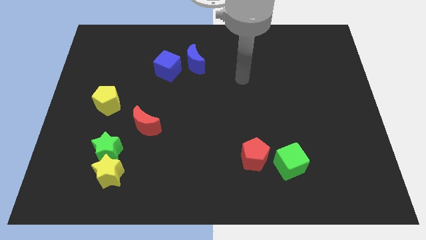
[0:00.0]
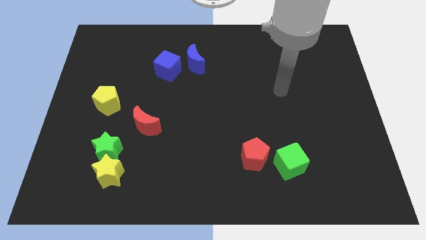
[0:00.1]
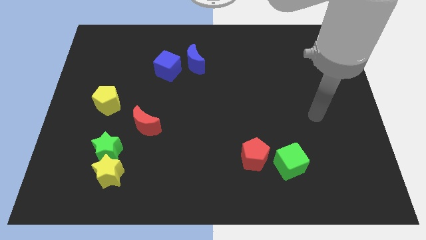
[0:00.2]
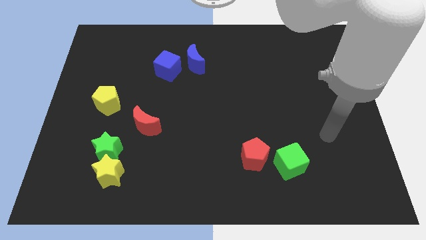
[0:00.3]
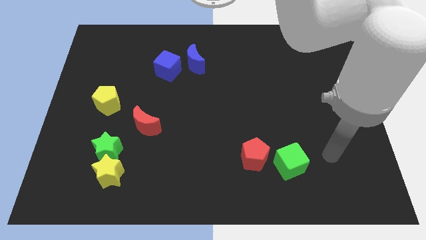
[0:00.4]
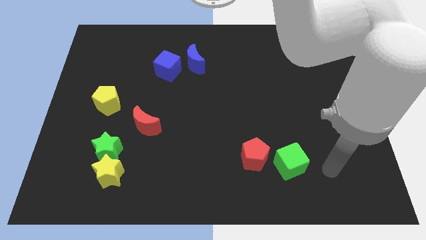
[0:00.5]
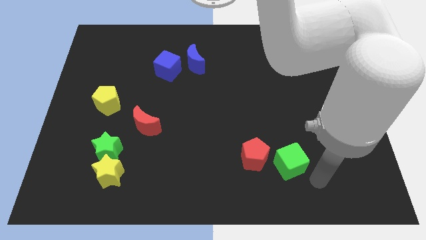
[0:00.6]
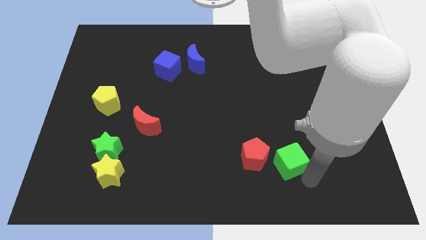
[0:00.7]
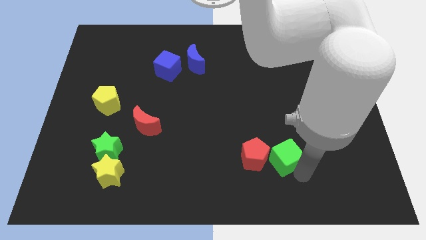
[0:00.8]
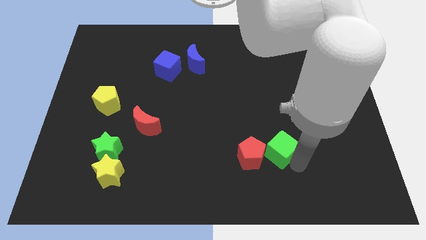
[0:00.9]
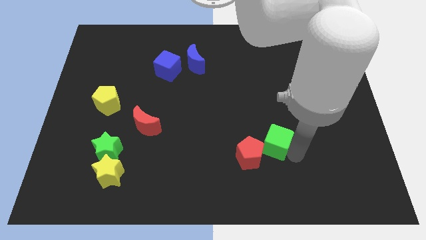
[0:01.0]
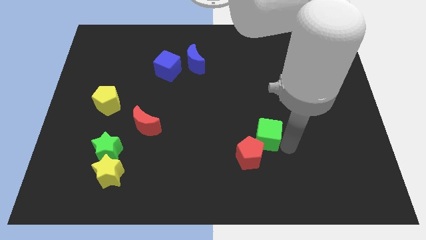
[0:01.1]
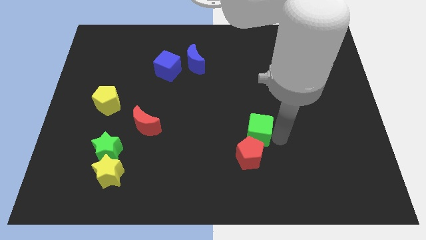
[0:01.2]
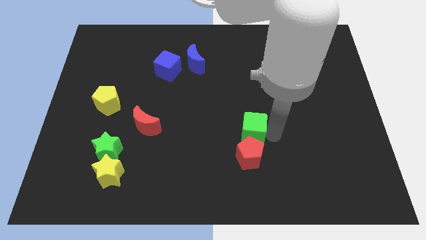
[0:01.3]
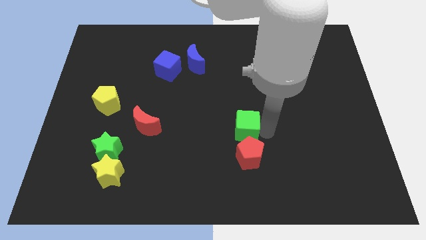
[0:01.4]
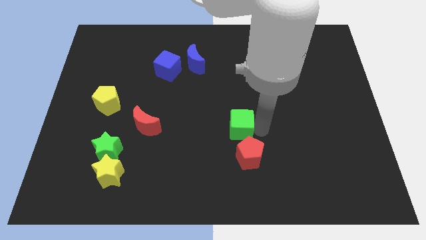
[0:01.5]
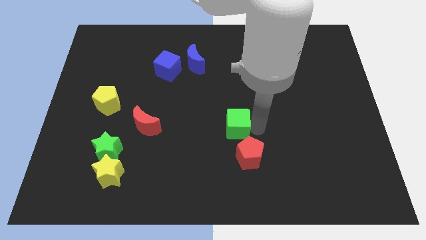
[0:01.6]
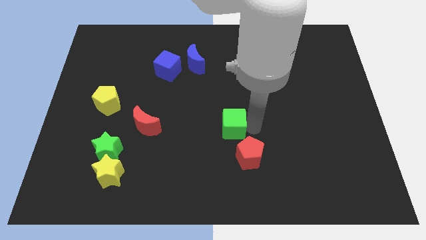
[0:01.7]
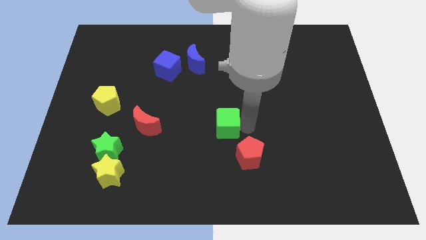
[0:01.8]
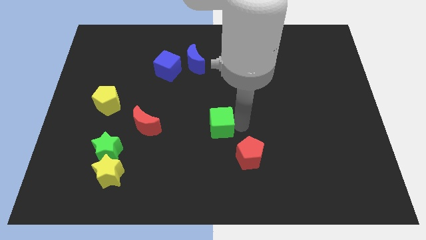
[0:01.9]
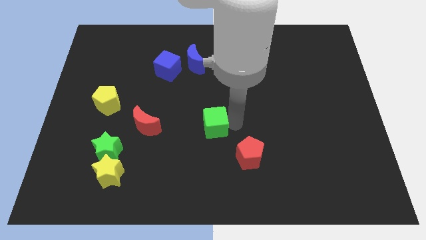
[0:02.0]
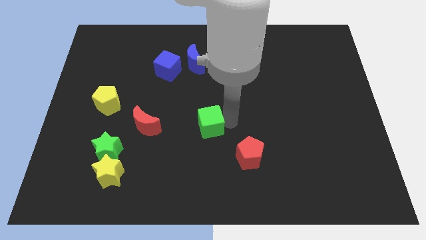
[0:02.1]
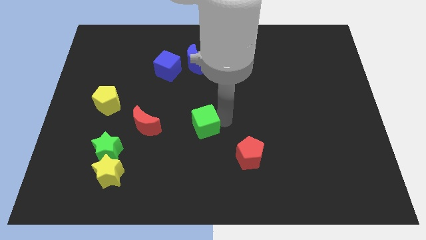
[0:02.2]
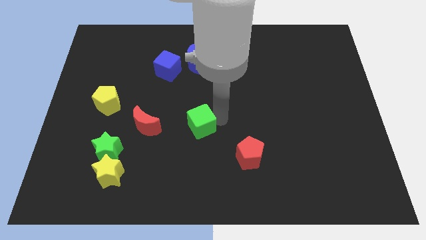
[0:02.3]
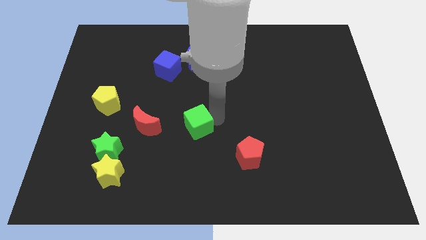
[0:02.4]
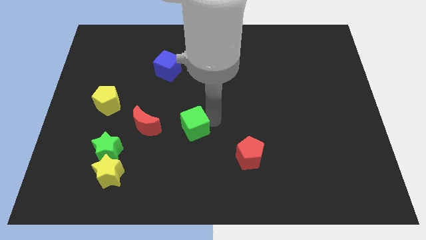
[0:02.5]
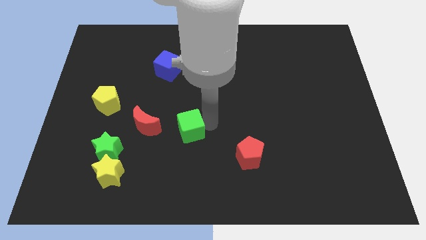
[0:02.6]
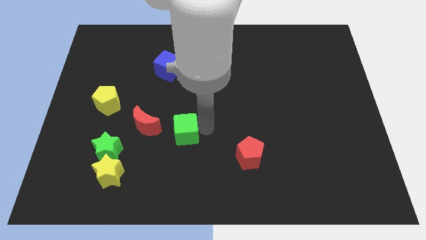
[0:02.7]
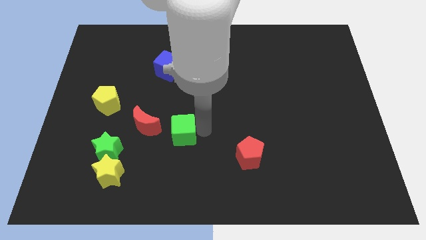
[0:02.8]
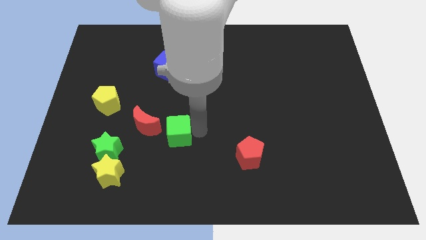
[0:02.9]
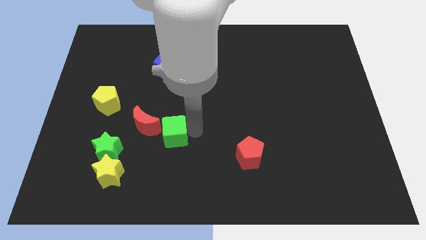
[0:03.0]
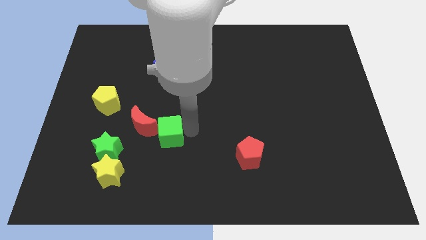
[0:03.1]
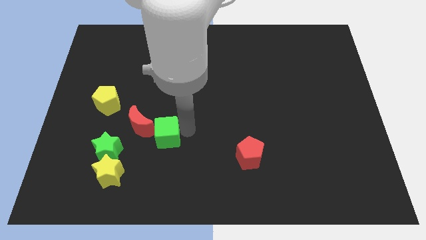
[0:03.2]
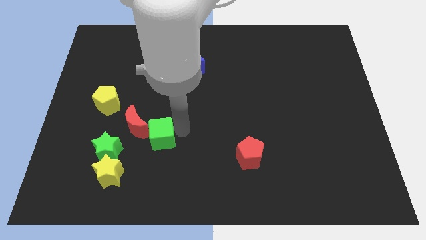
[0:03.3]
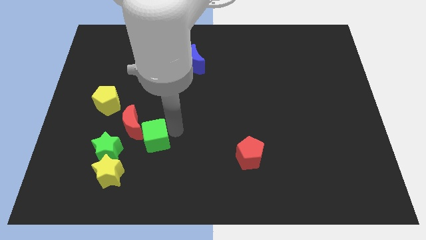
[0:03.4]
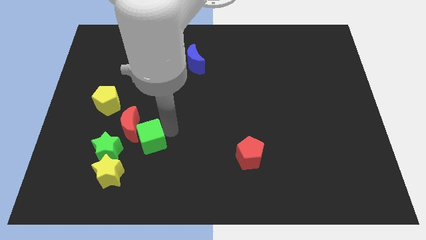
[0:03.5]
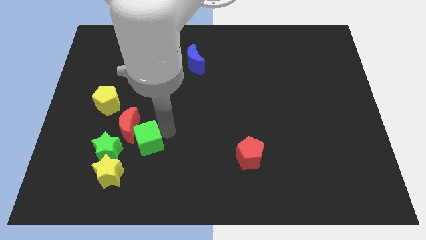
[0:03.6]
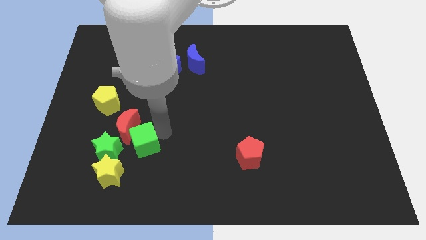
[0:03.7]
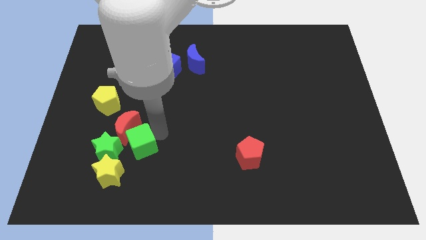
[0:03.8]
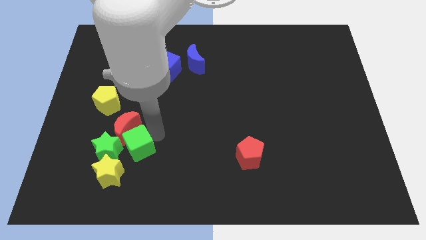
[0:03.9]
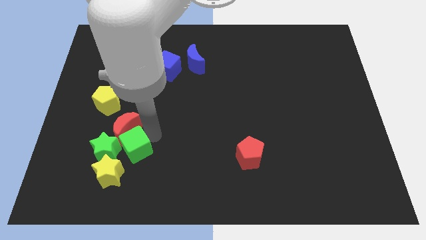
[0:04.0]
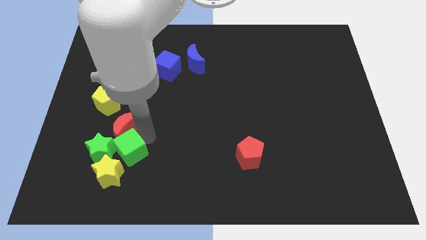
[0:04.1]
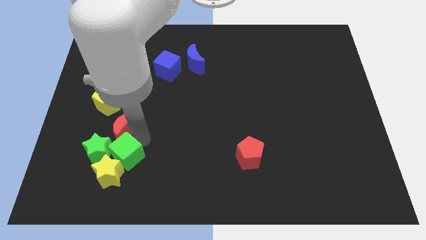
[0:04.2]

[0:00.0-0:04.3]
push the green cube to the green star

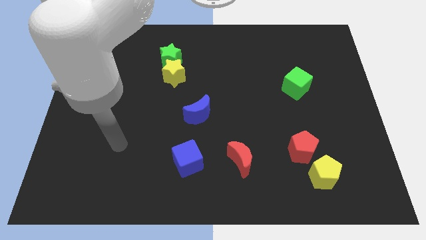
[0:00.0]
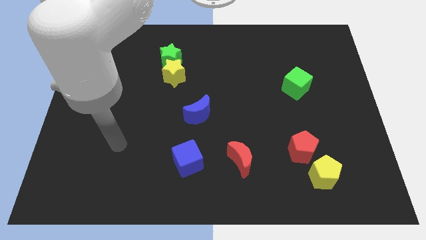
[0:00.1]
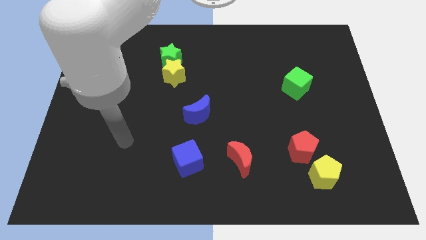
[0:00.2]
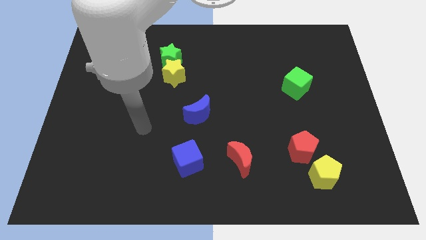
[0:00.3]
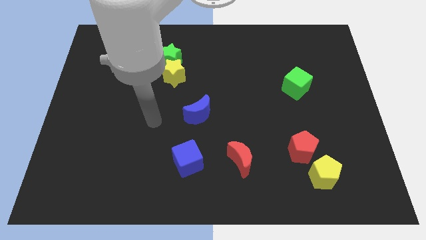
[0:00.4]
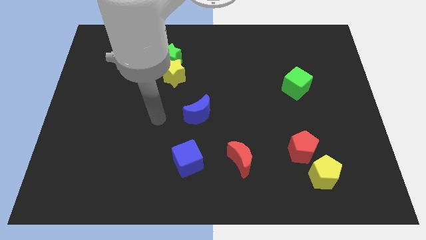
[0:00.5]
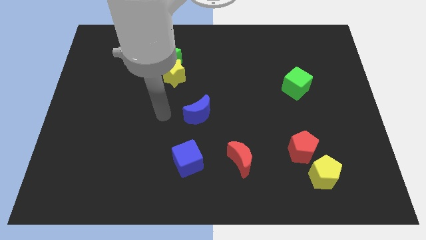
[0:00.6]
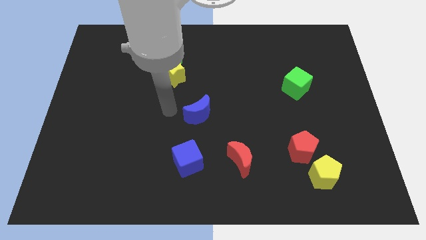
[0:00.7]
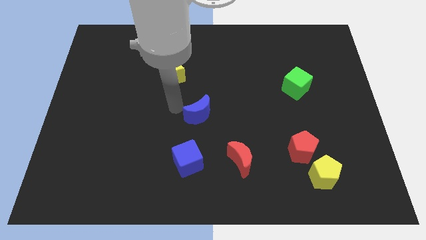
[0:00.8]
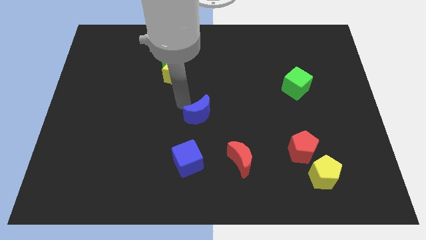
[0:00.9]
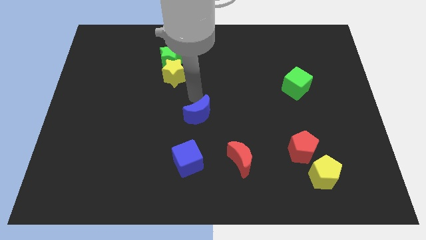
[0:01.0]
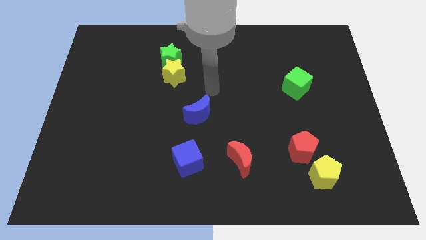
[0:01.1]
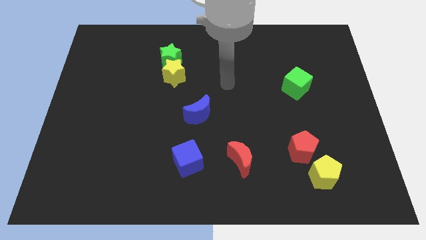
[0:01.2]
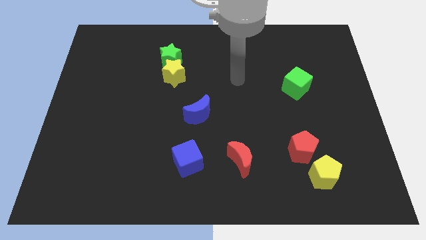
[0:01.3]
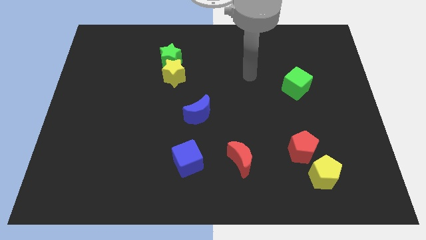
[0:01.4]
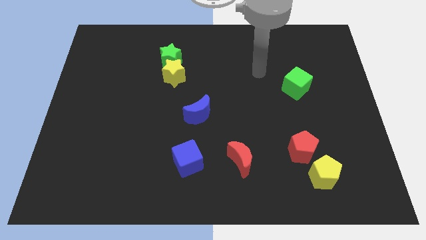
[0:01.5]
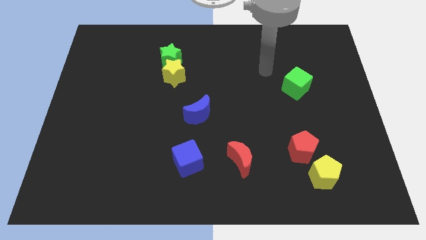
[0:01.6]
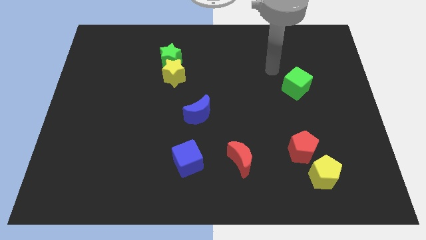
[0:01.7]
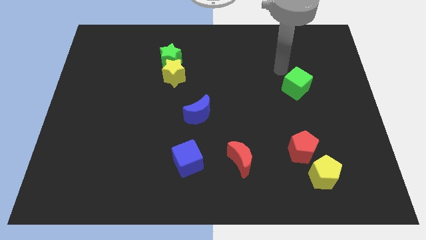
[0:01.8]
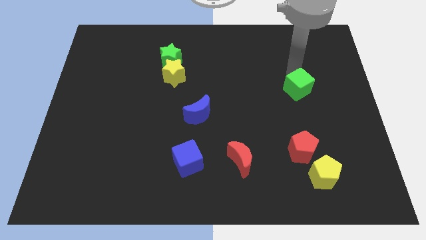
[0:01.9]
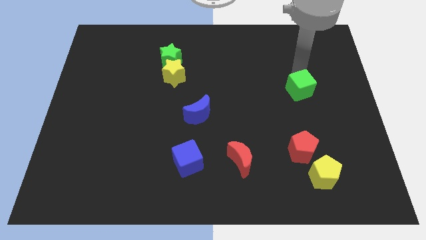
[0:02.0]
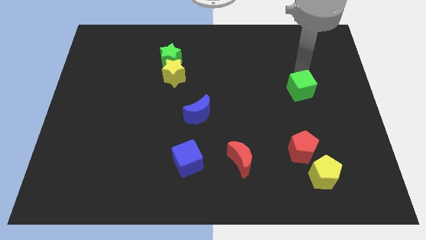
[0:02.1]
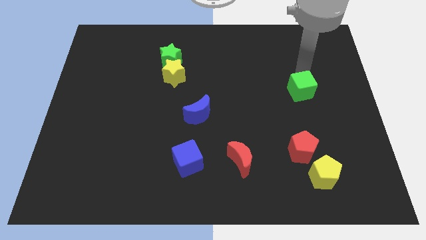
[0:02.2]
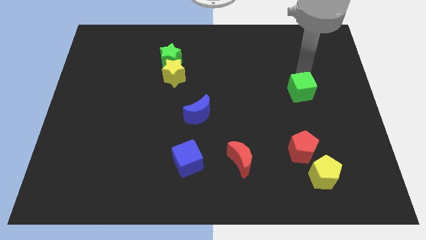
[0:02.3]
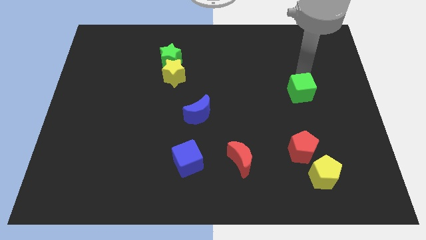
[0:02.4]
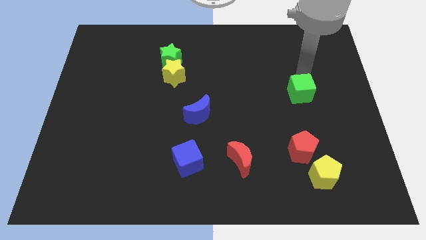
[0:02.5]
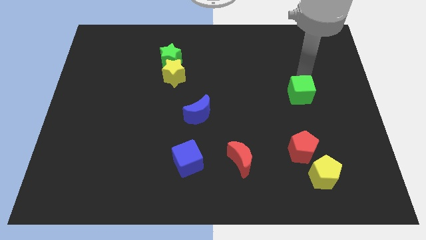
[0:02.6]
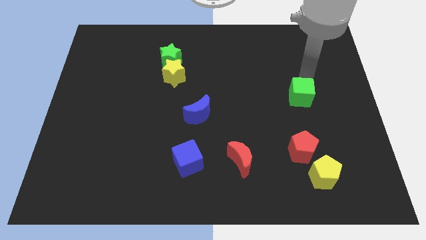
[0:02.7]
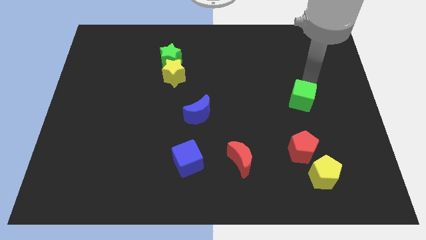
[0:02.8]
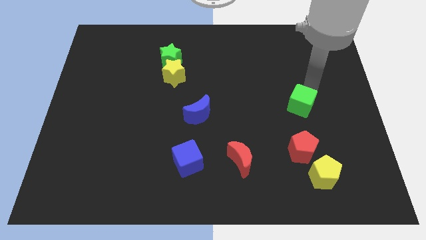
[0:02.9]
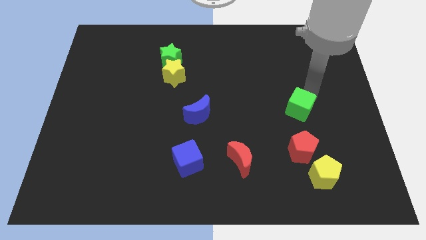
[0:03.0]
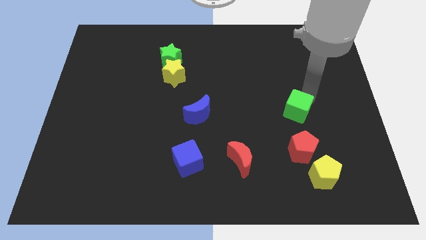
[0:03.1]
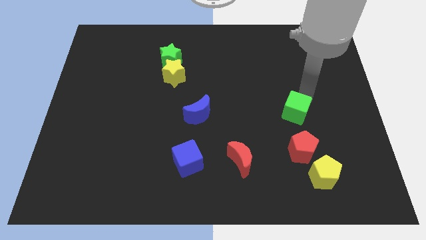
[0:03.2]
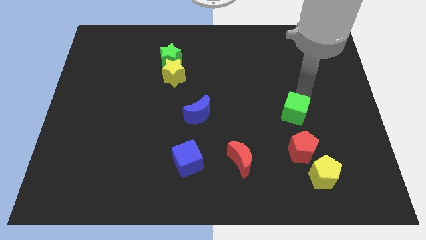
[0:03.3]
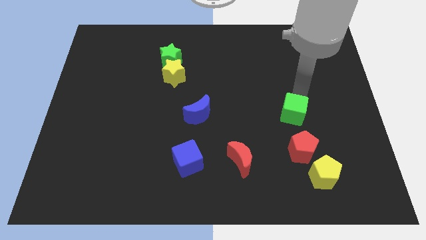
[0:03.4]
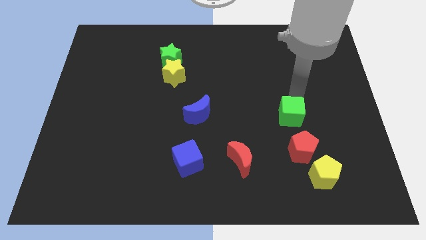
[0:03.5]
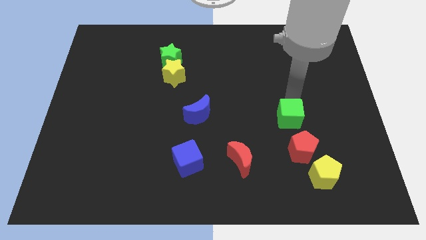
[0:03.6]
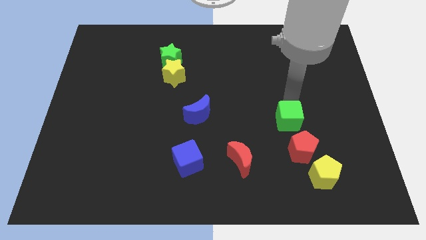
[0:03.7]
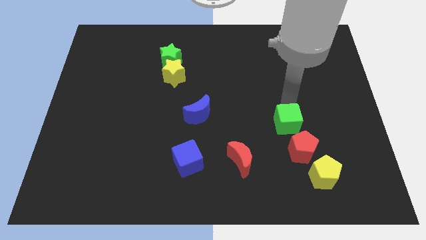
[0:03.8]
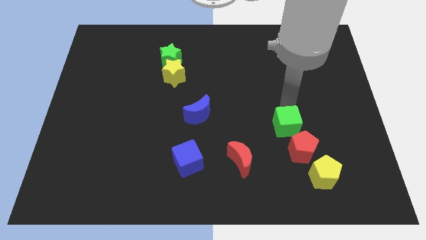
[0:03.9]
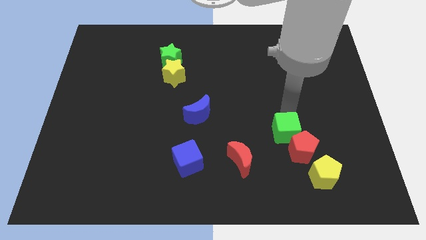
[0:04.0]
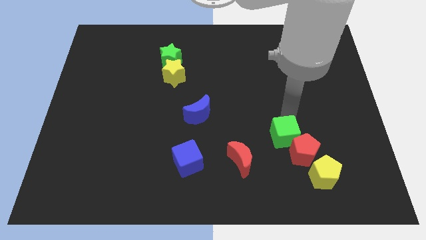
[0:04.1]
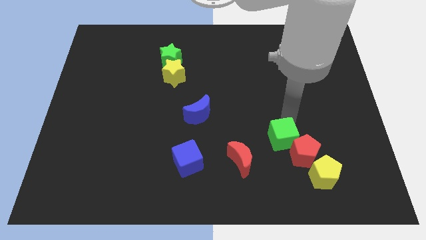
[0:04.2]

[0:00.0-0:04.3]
put the green cube to the red pentagon
